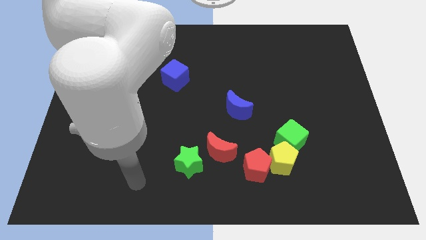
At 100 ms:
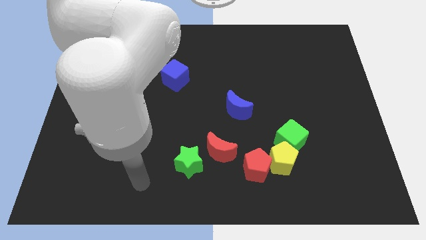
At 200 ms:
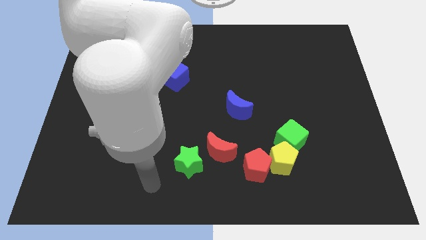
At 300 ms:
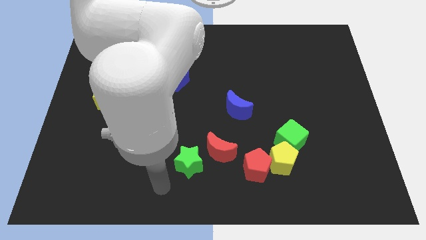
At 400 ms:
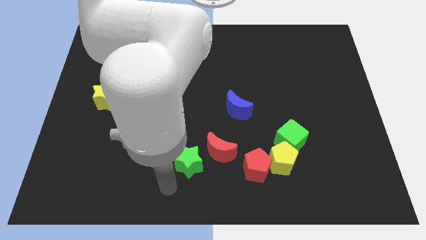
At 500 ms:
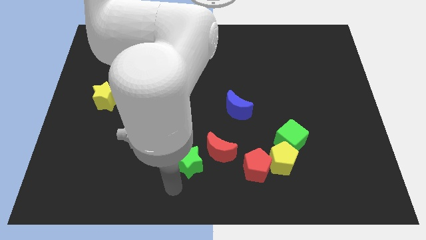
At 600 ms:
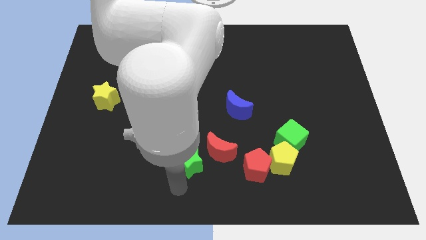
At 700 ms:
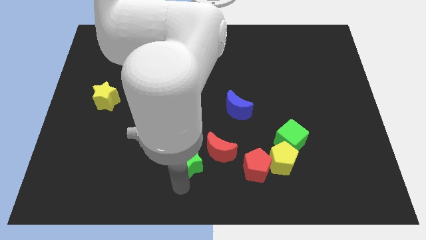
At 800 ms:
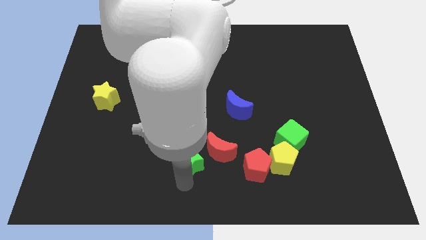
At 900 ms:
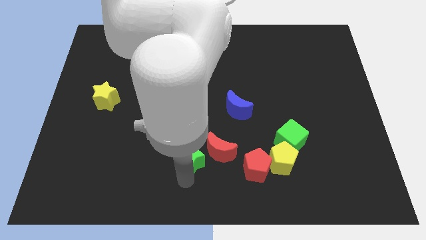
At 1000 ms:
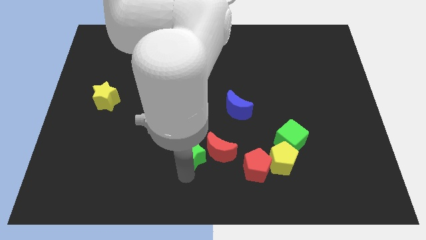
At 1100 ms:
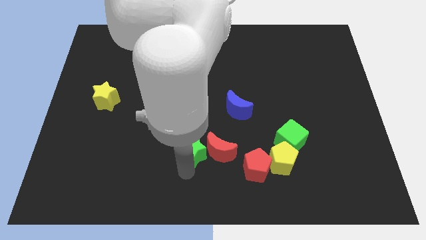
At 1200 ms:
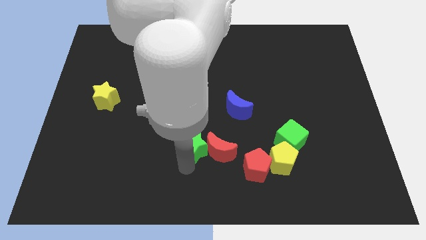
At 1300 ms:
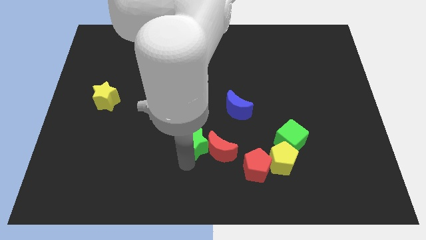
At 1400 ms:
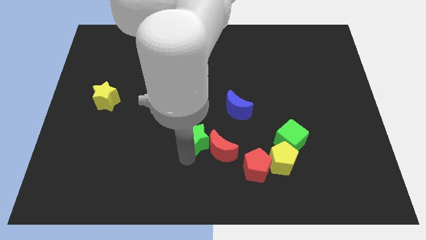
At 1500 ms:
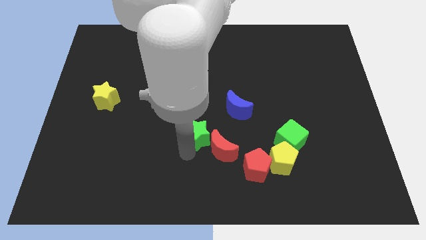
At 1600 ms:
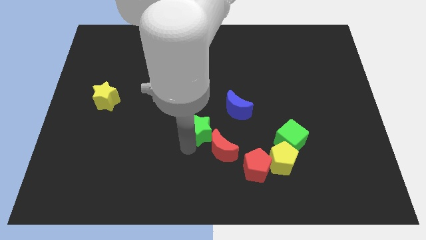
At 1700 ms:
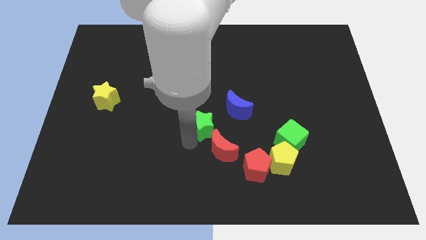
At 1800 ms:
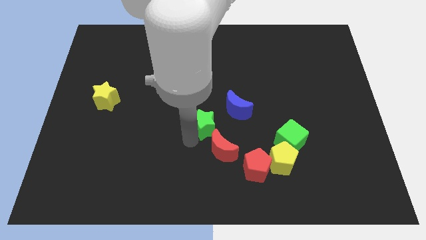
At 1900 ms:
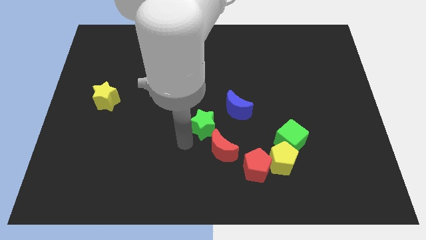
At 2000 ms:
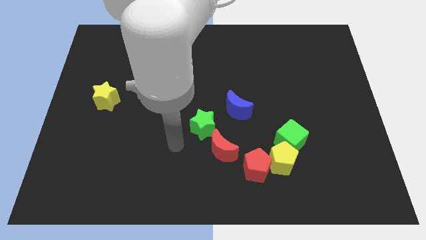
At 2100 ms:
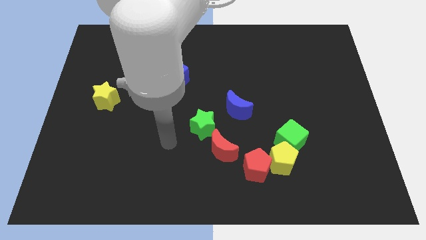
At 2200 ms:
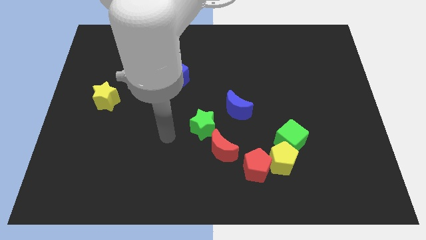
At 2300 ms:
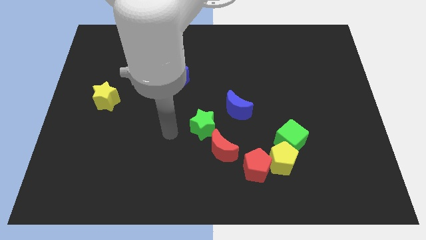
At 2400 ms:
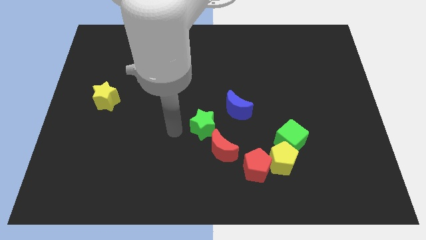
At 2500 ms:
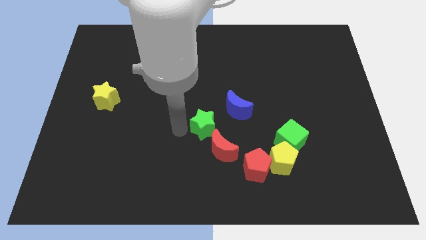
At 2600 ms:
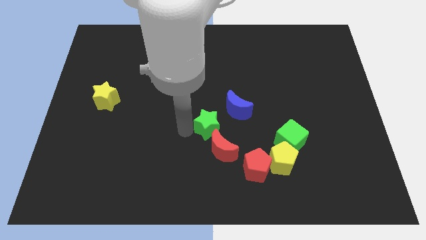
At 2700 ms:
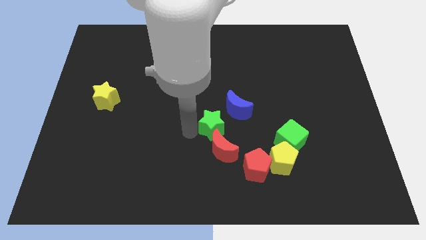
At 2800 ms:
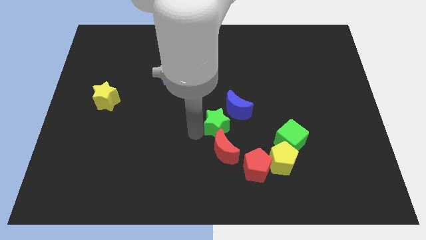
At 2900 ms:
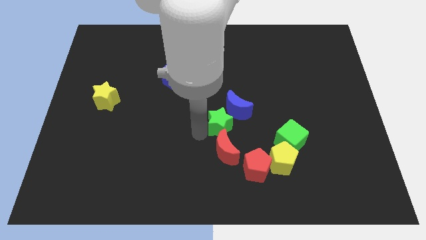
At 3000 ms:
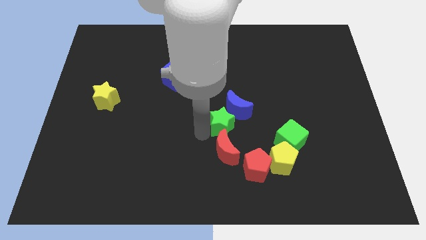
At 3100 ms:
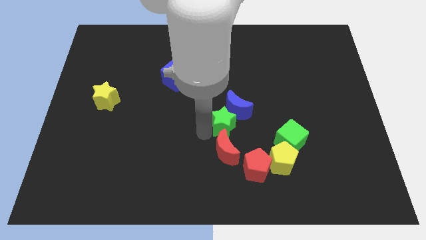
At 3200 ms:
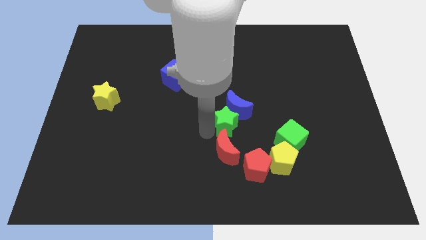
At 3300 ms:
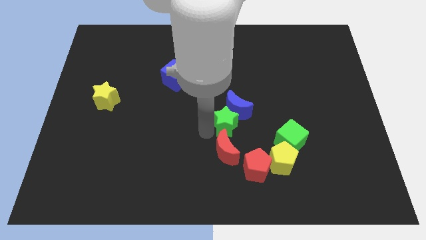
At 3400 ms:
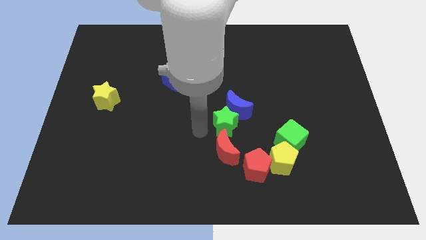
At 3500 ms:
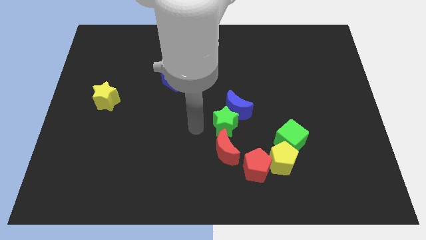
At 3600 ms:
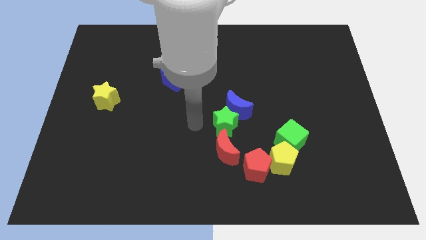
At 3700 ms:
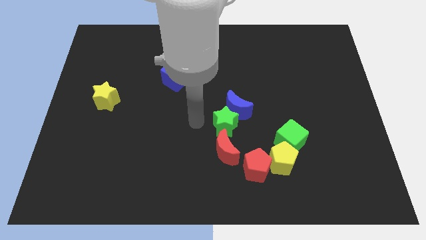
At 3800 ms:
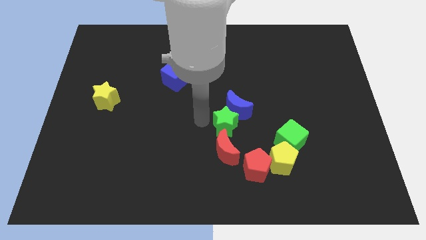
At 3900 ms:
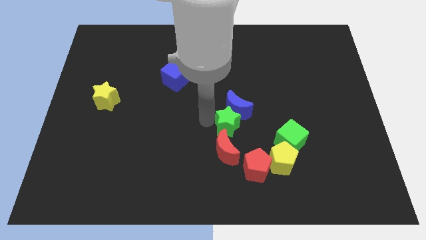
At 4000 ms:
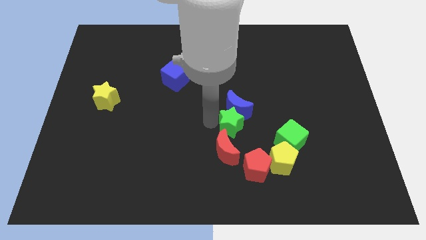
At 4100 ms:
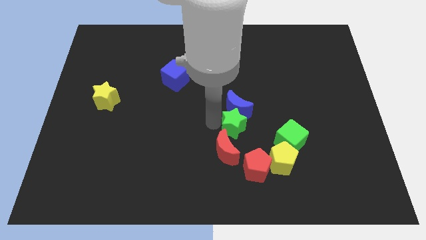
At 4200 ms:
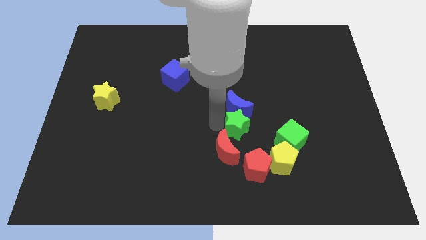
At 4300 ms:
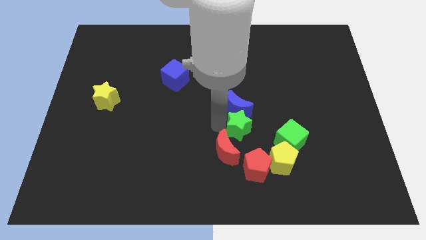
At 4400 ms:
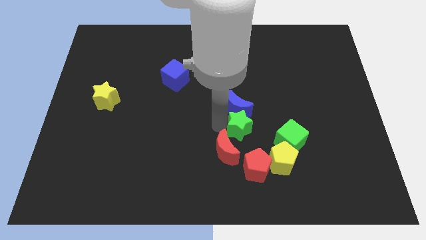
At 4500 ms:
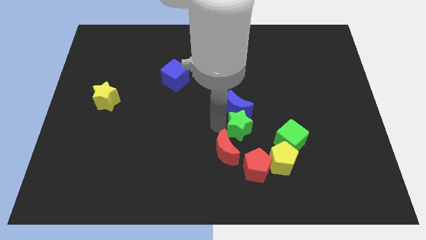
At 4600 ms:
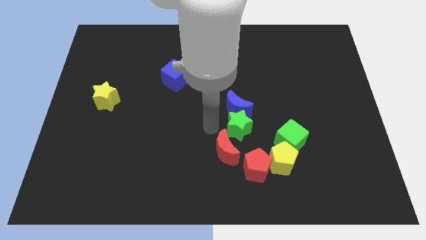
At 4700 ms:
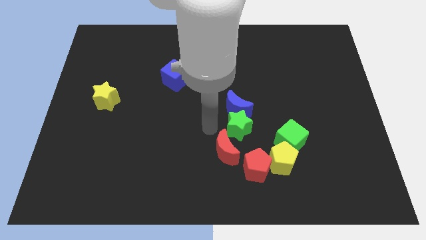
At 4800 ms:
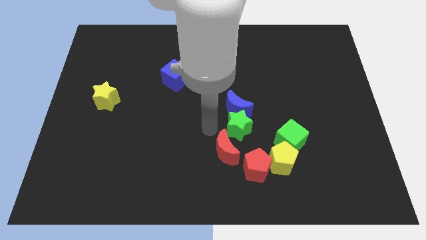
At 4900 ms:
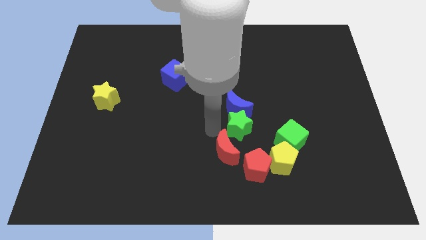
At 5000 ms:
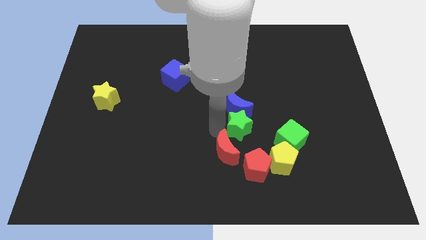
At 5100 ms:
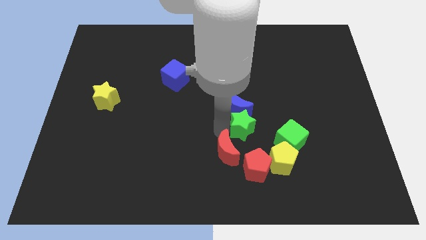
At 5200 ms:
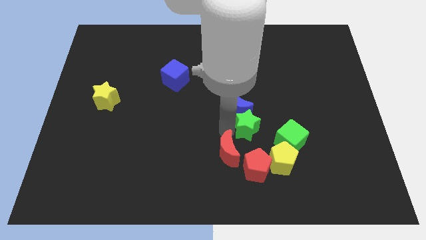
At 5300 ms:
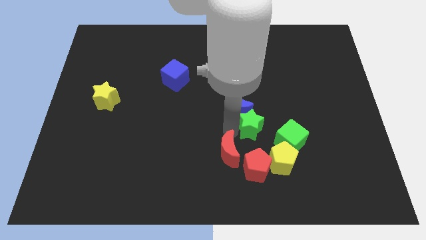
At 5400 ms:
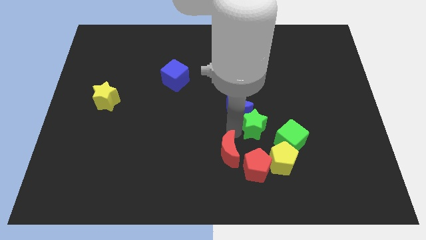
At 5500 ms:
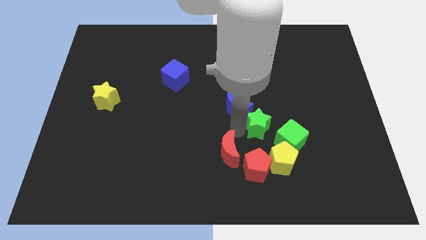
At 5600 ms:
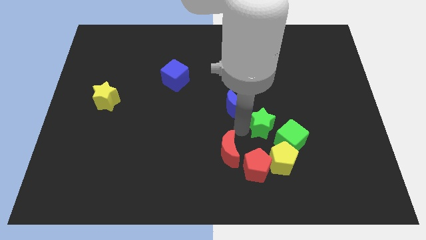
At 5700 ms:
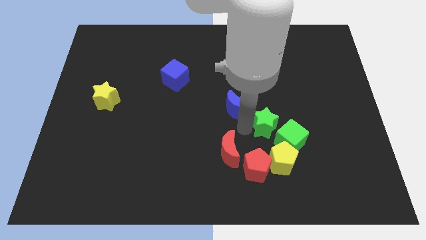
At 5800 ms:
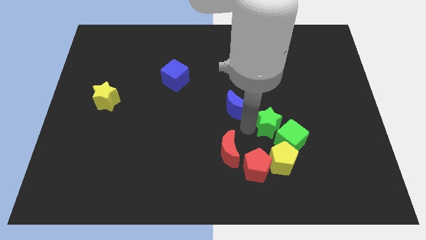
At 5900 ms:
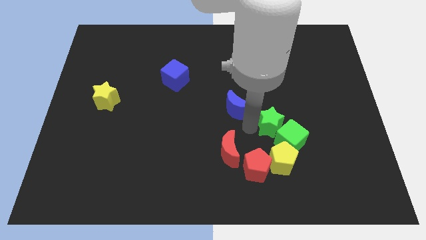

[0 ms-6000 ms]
put the green star close to the green cube

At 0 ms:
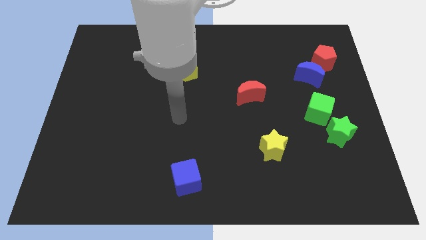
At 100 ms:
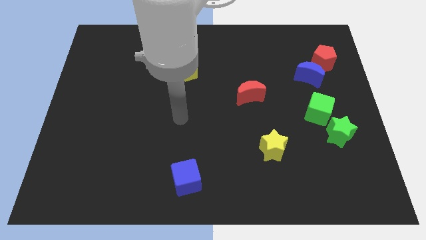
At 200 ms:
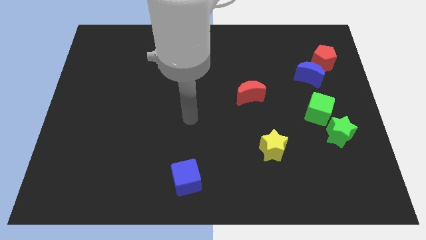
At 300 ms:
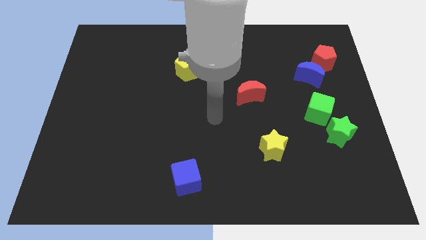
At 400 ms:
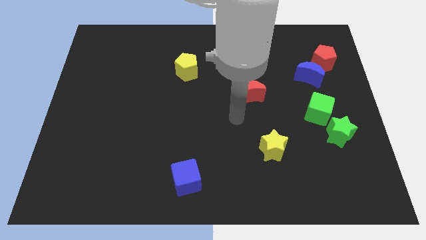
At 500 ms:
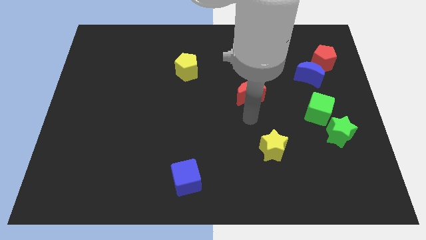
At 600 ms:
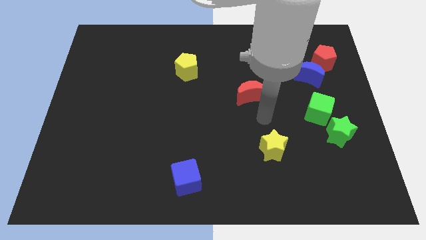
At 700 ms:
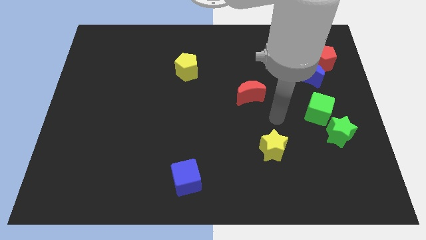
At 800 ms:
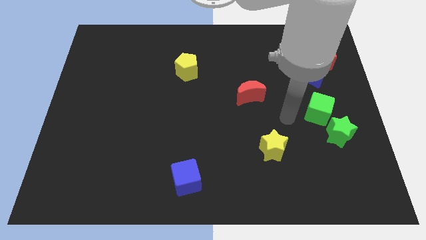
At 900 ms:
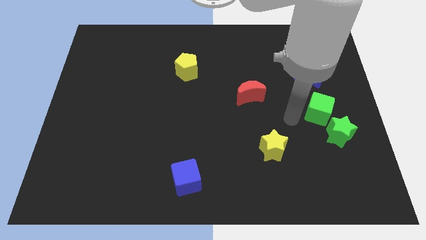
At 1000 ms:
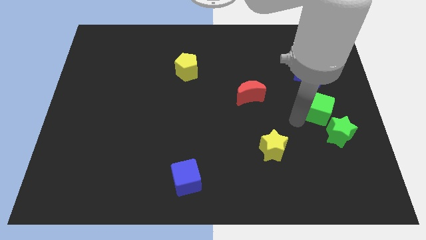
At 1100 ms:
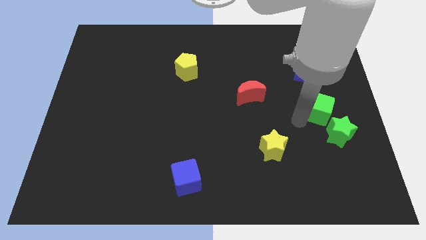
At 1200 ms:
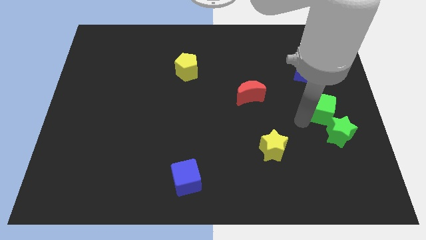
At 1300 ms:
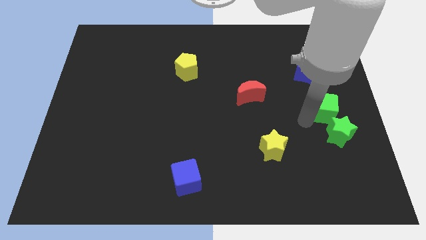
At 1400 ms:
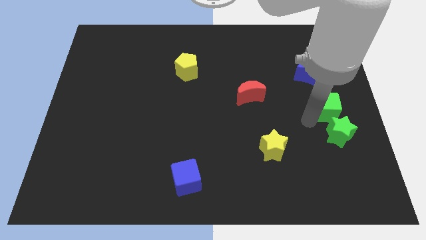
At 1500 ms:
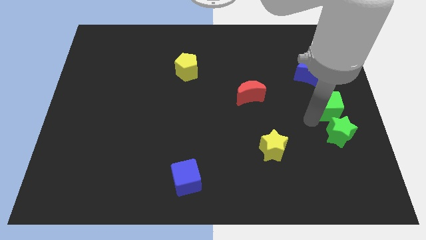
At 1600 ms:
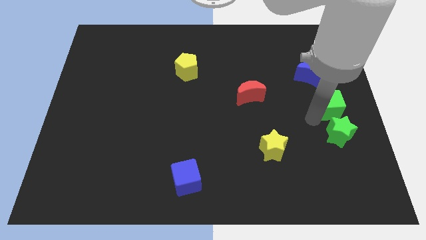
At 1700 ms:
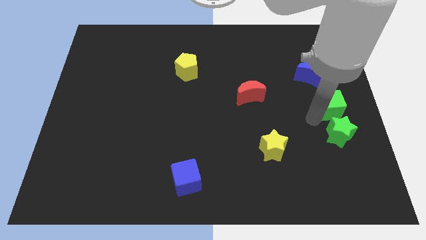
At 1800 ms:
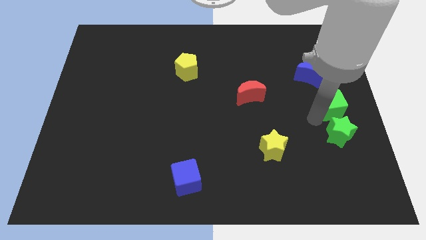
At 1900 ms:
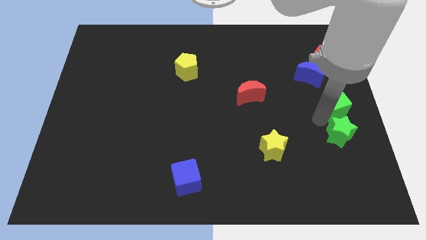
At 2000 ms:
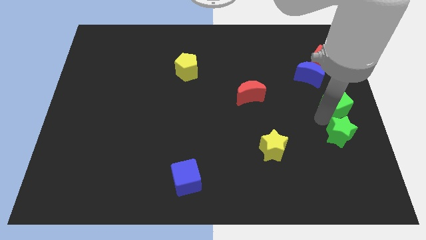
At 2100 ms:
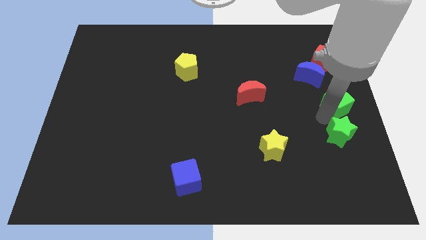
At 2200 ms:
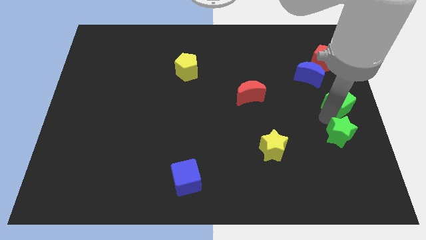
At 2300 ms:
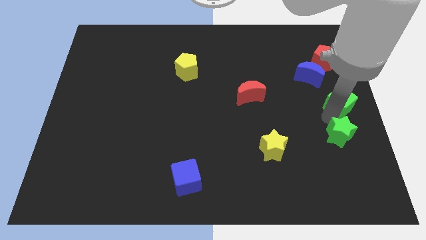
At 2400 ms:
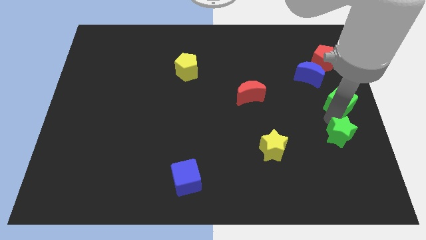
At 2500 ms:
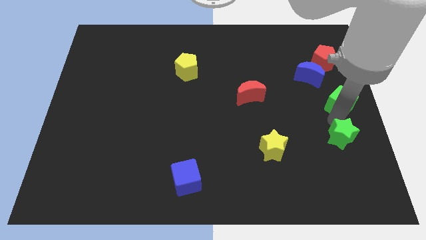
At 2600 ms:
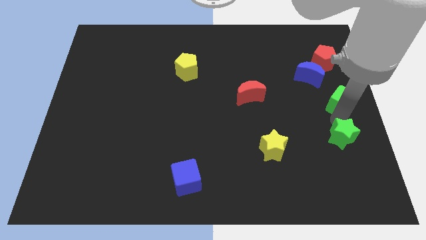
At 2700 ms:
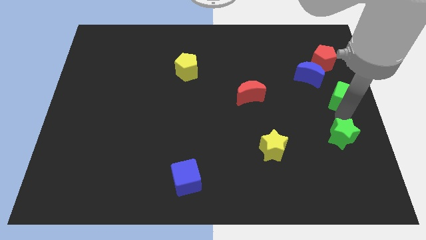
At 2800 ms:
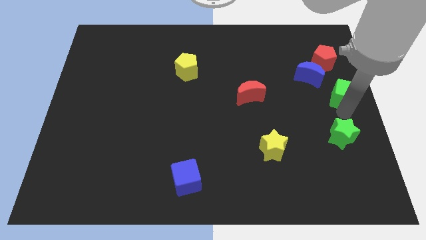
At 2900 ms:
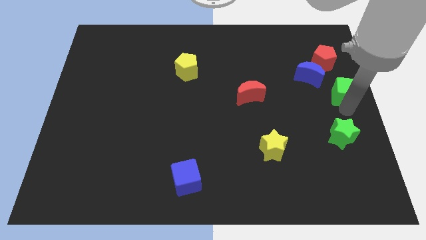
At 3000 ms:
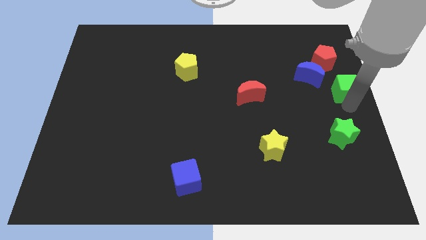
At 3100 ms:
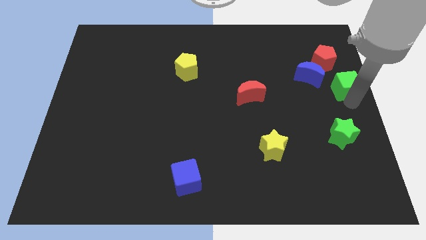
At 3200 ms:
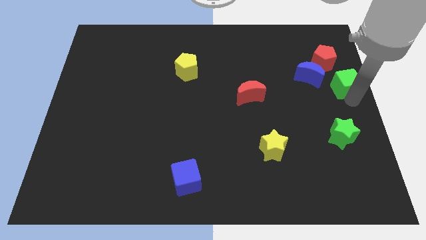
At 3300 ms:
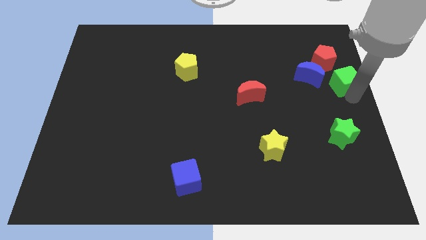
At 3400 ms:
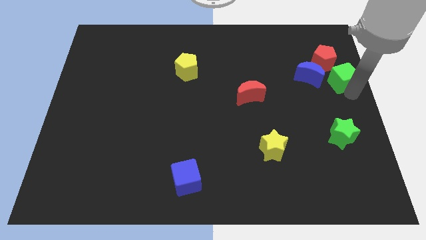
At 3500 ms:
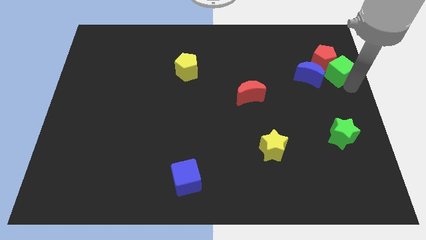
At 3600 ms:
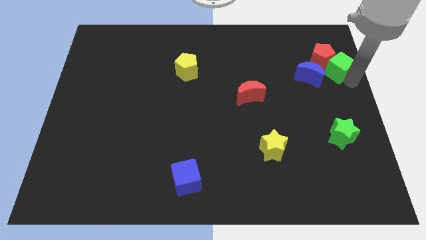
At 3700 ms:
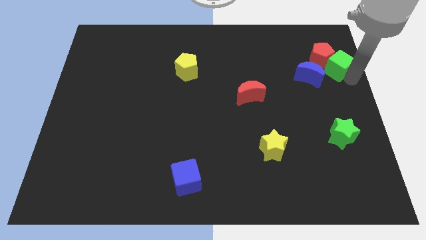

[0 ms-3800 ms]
put the green cube towards the red pentagon
